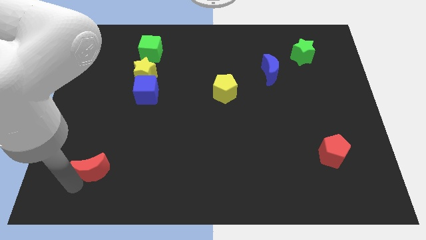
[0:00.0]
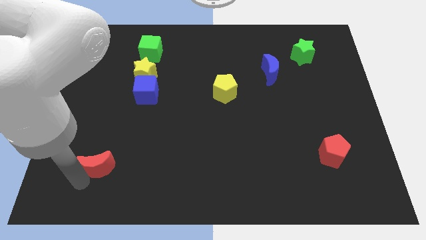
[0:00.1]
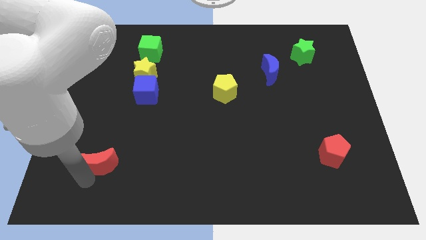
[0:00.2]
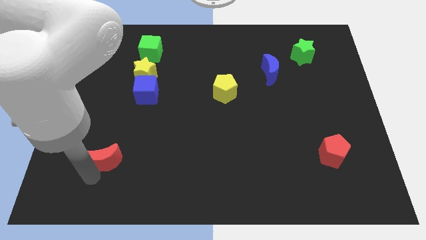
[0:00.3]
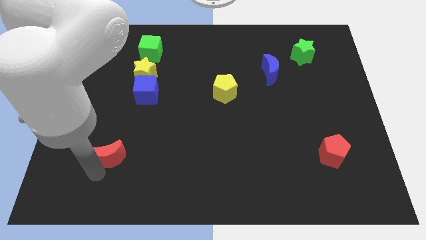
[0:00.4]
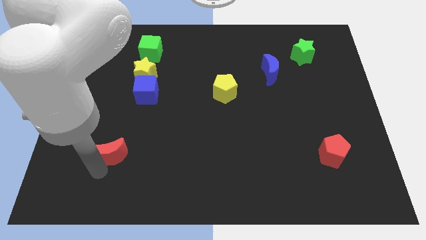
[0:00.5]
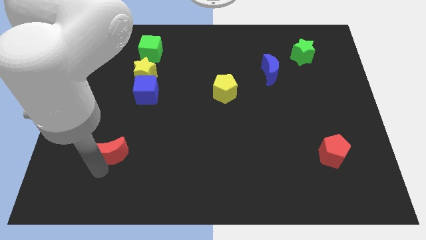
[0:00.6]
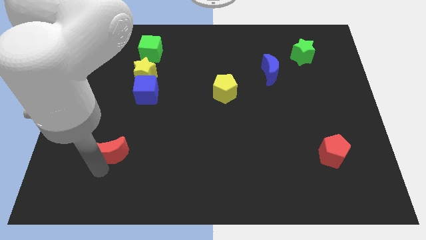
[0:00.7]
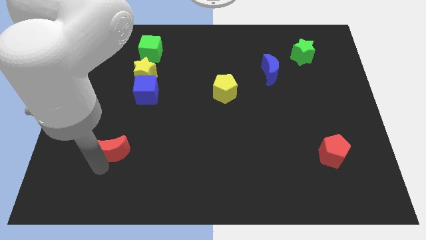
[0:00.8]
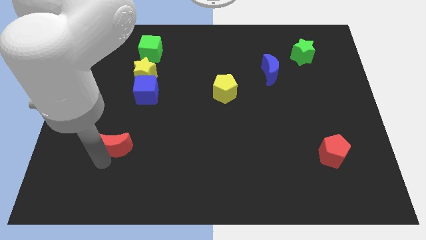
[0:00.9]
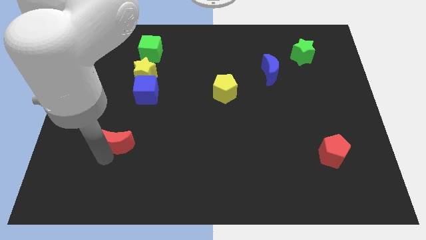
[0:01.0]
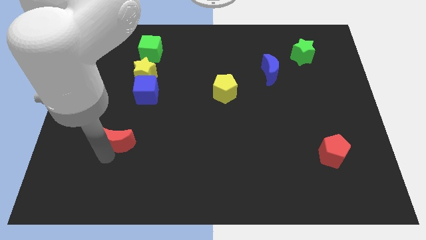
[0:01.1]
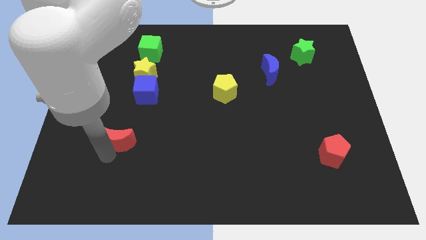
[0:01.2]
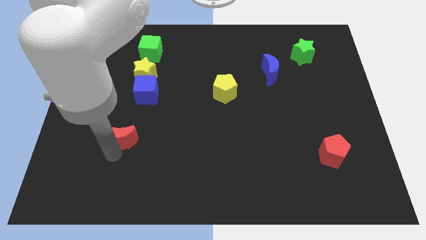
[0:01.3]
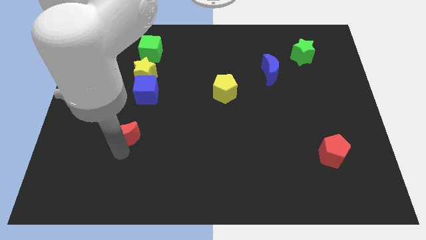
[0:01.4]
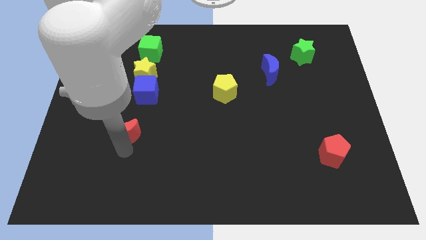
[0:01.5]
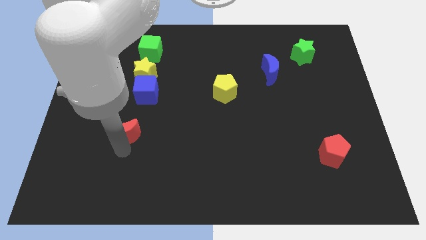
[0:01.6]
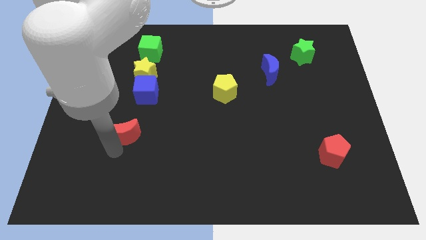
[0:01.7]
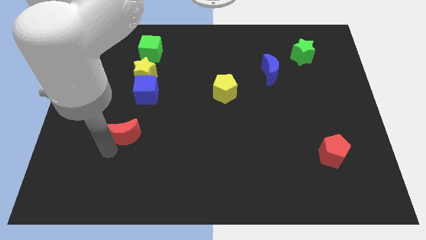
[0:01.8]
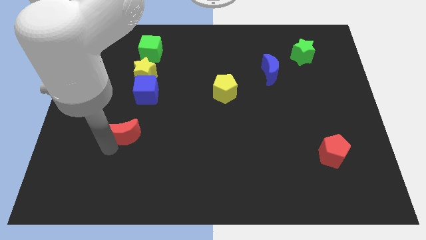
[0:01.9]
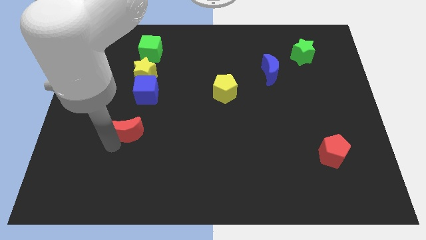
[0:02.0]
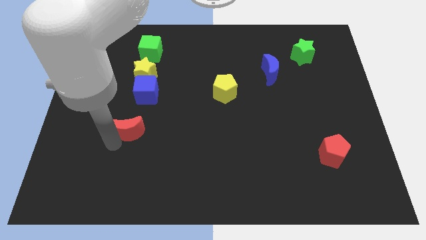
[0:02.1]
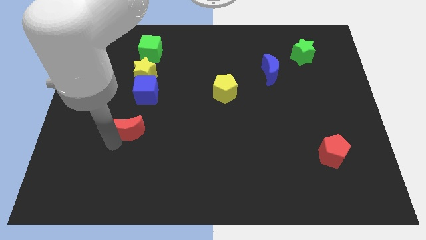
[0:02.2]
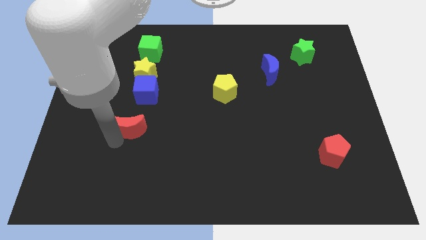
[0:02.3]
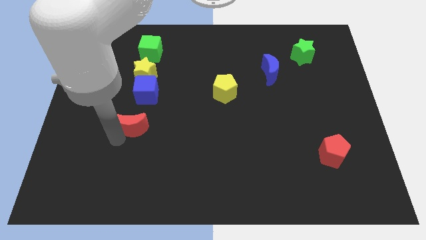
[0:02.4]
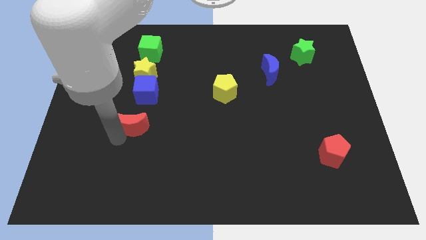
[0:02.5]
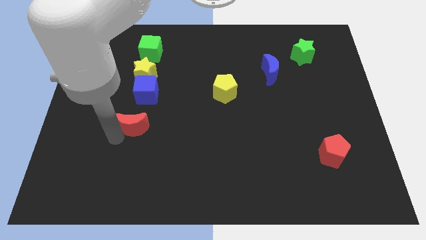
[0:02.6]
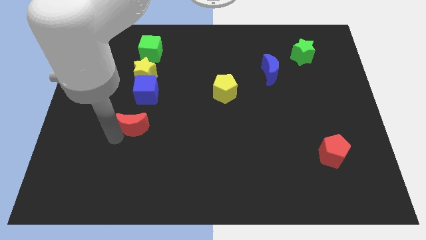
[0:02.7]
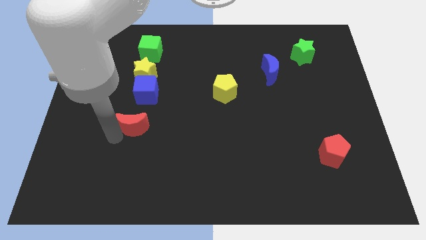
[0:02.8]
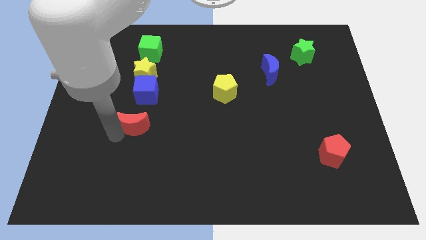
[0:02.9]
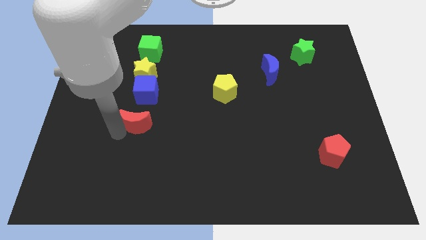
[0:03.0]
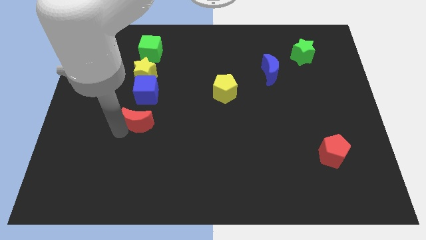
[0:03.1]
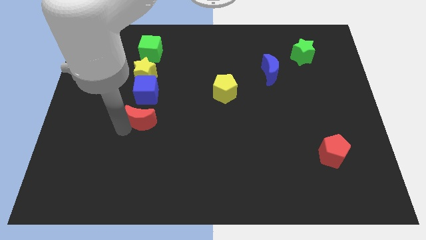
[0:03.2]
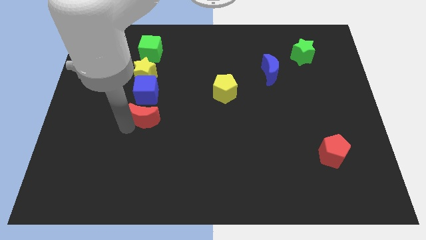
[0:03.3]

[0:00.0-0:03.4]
place the red crescent below the blue cube

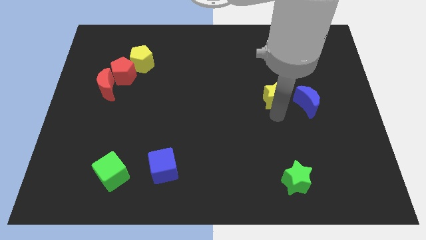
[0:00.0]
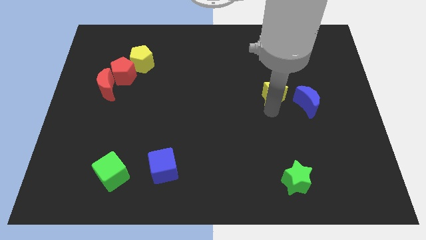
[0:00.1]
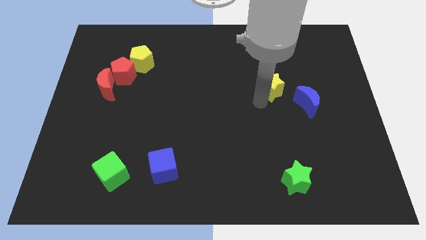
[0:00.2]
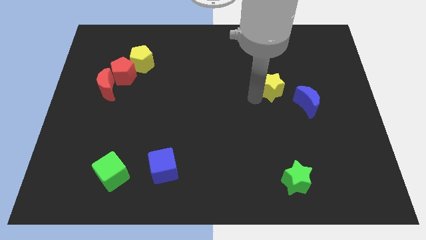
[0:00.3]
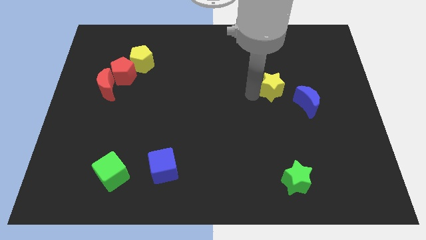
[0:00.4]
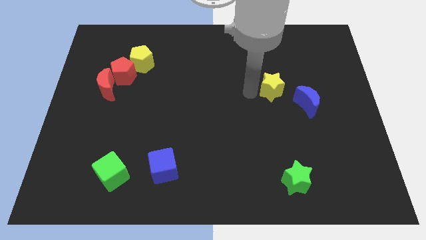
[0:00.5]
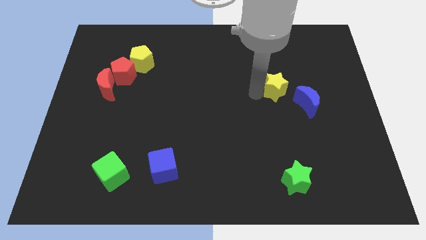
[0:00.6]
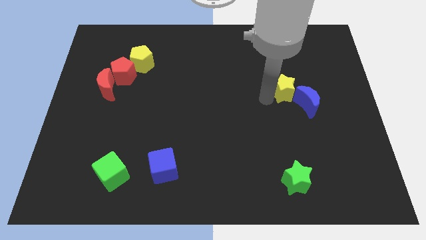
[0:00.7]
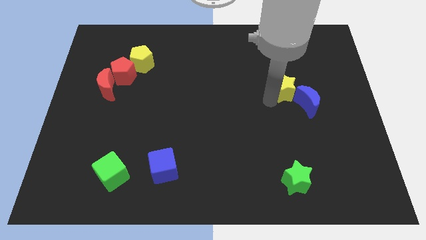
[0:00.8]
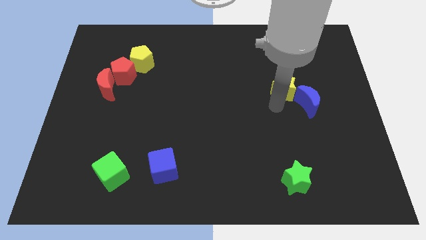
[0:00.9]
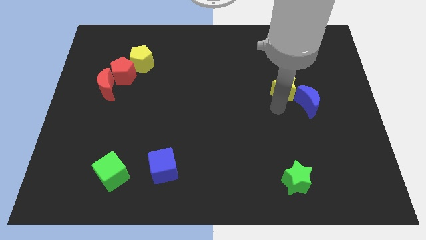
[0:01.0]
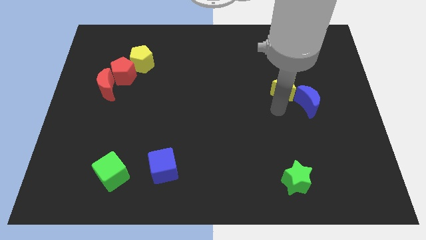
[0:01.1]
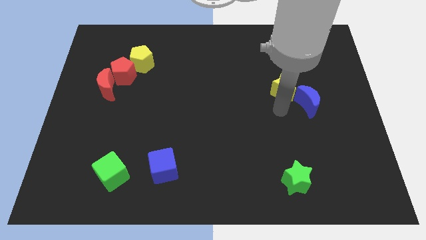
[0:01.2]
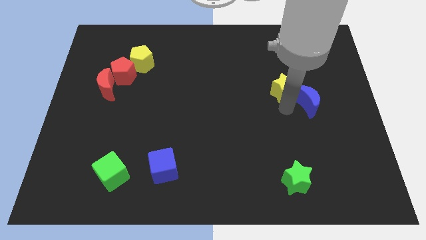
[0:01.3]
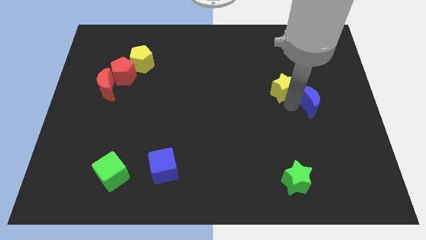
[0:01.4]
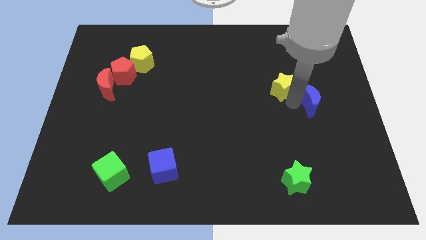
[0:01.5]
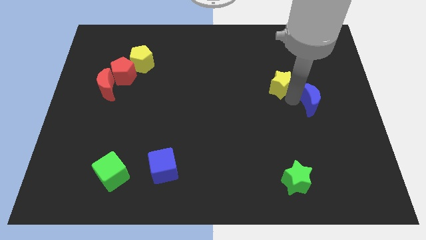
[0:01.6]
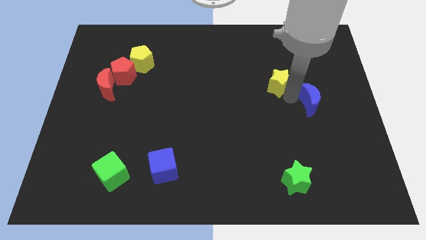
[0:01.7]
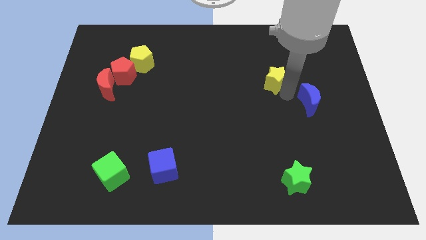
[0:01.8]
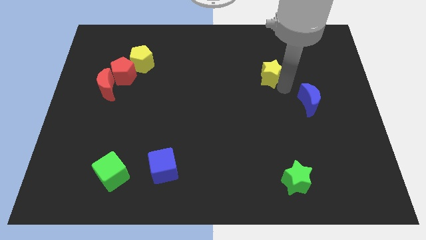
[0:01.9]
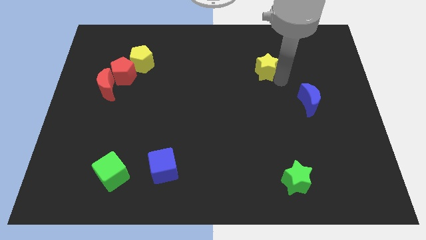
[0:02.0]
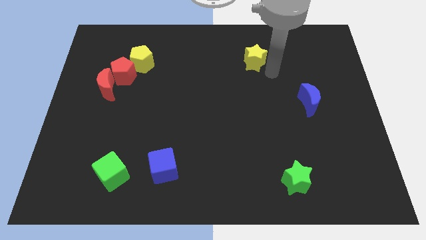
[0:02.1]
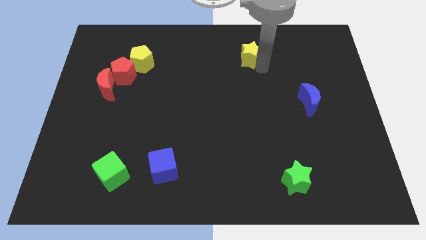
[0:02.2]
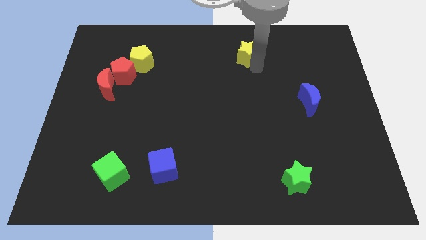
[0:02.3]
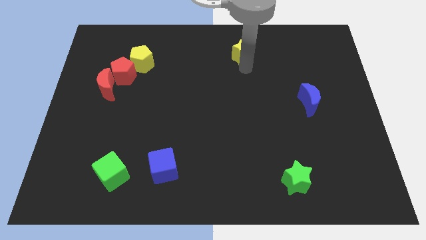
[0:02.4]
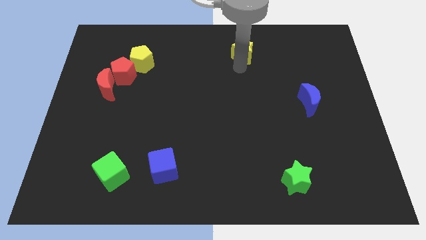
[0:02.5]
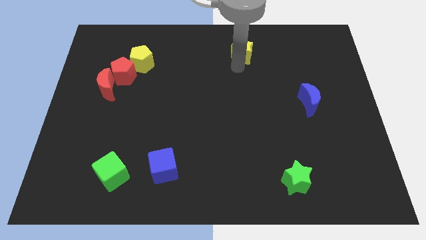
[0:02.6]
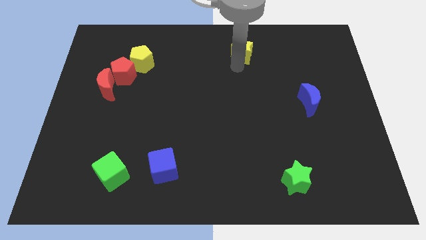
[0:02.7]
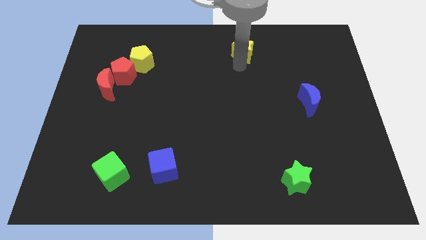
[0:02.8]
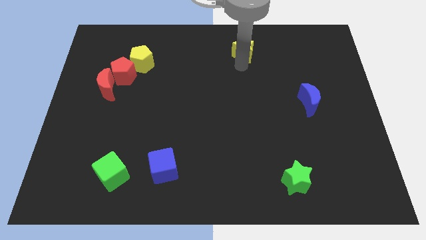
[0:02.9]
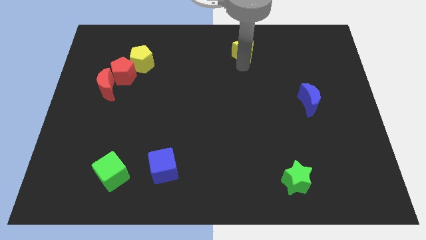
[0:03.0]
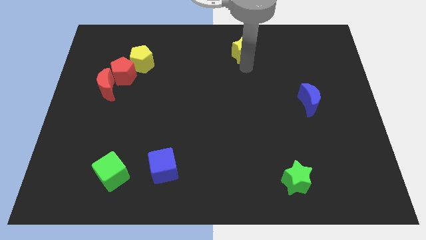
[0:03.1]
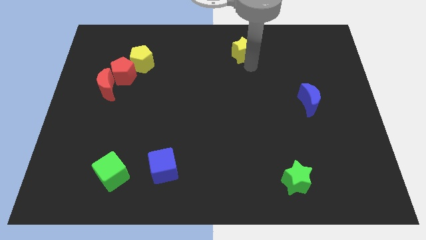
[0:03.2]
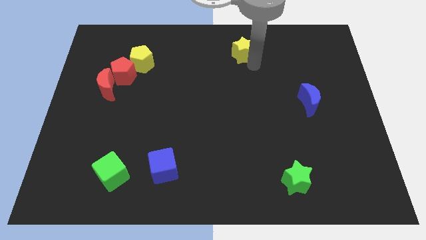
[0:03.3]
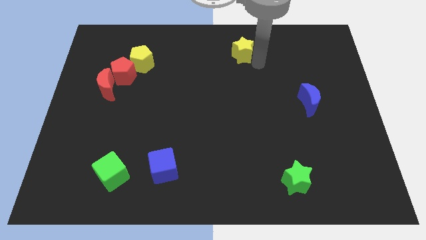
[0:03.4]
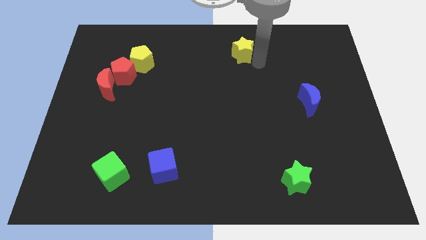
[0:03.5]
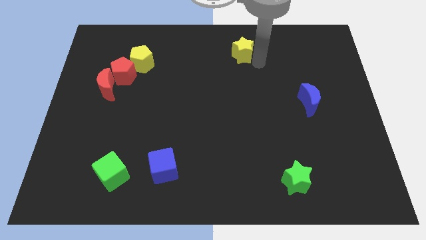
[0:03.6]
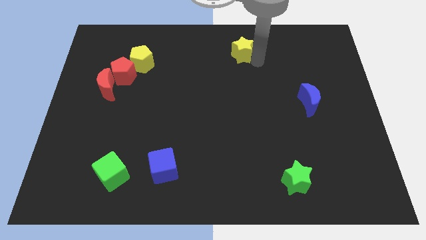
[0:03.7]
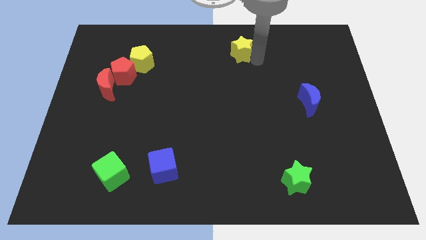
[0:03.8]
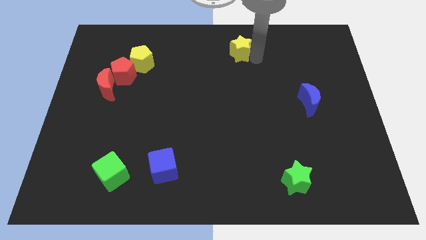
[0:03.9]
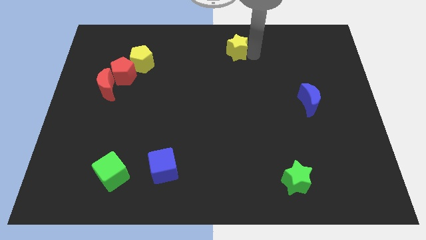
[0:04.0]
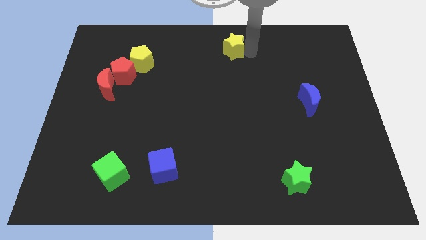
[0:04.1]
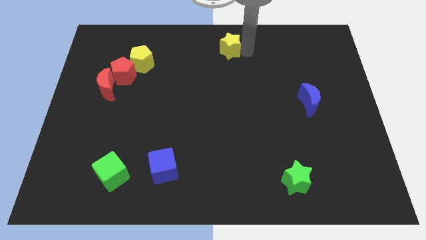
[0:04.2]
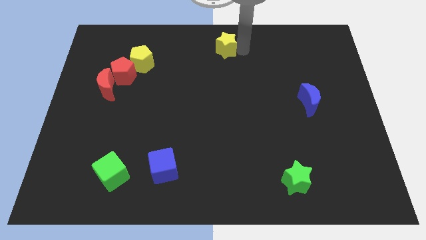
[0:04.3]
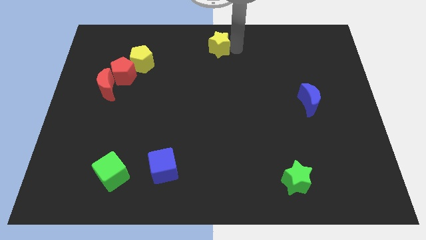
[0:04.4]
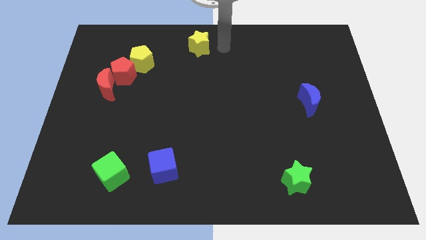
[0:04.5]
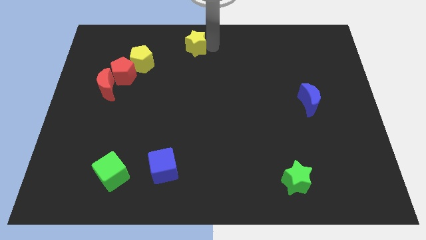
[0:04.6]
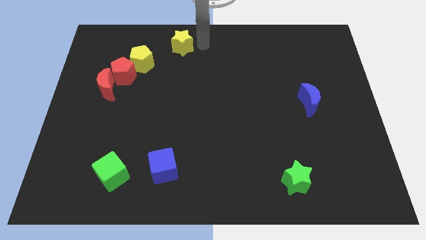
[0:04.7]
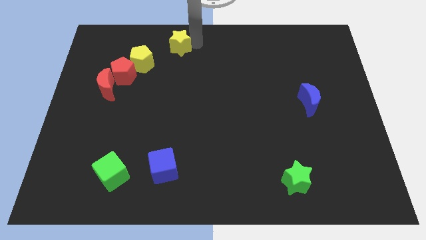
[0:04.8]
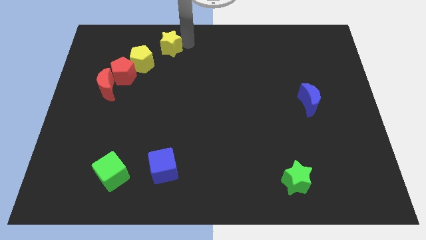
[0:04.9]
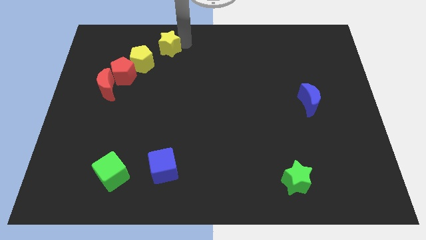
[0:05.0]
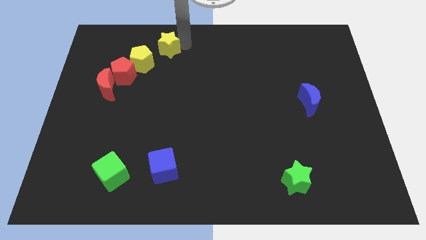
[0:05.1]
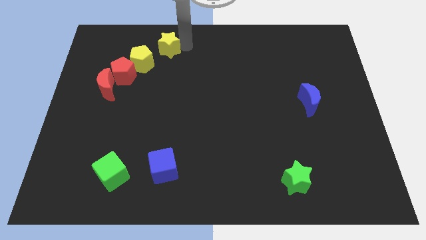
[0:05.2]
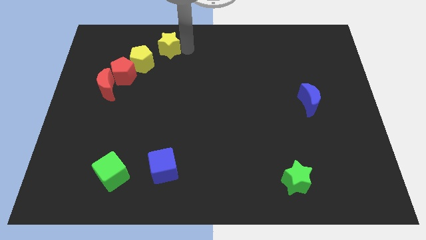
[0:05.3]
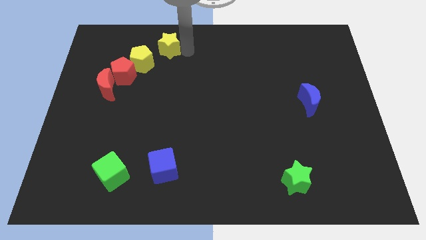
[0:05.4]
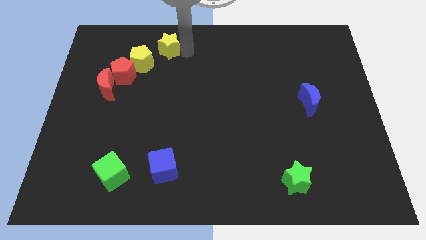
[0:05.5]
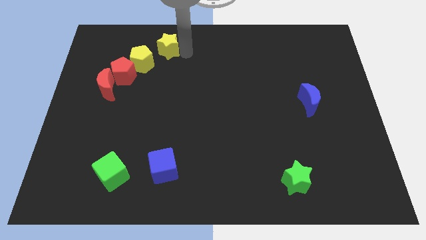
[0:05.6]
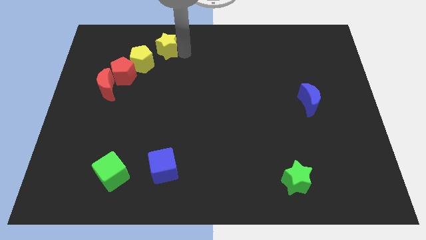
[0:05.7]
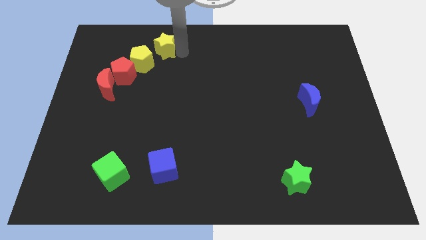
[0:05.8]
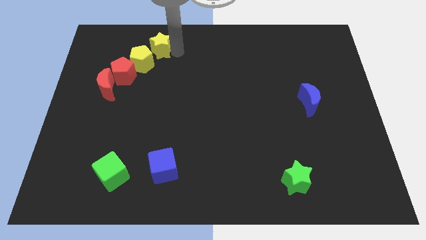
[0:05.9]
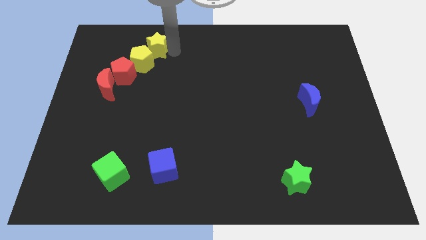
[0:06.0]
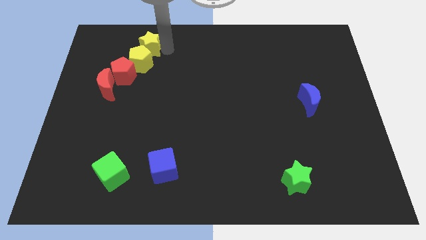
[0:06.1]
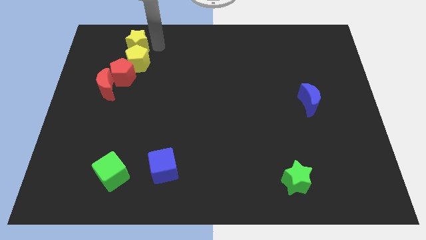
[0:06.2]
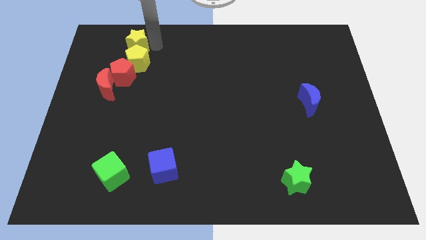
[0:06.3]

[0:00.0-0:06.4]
move the yeelow star above the yellow pentagon
